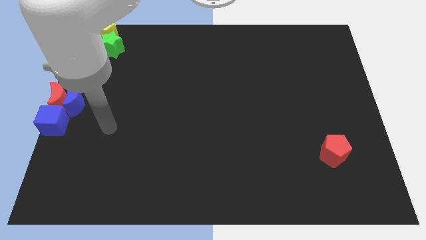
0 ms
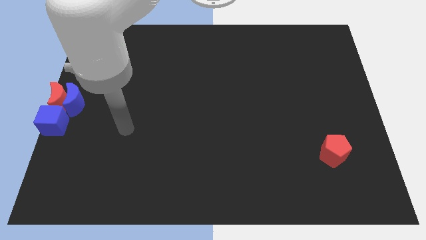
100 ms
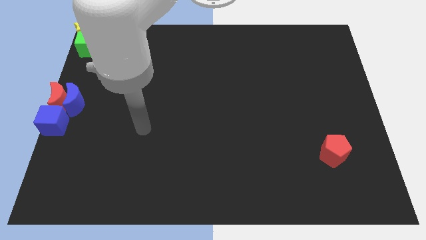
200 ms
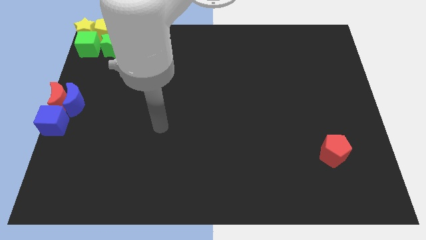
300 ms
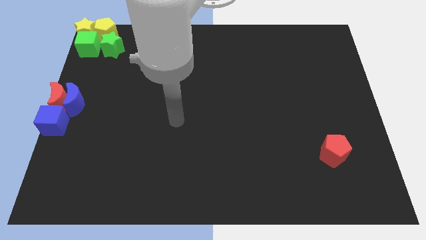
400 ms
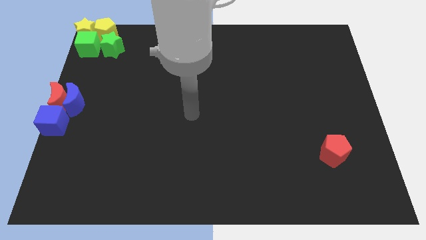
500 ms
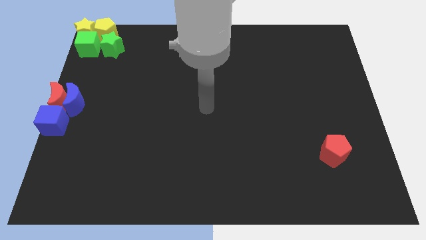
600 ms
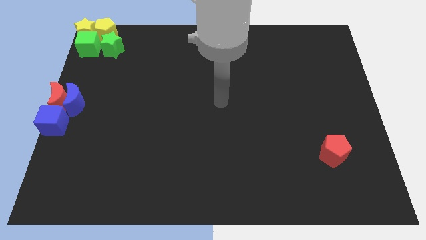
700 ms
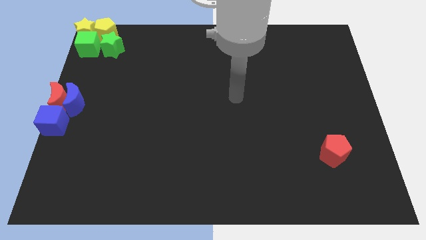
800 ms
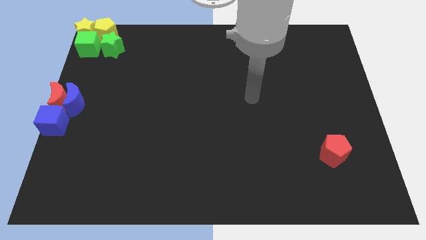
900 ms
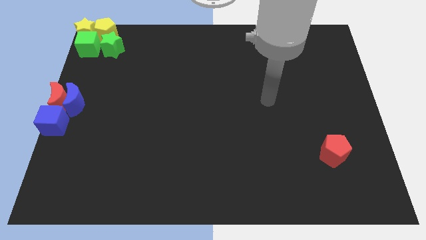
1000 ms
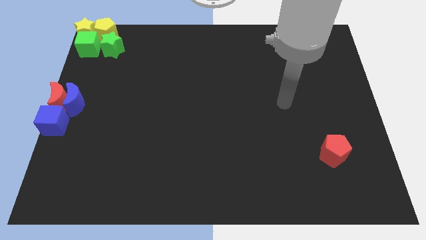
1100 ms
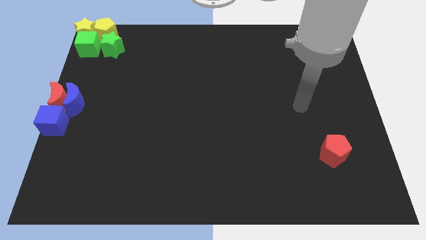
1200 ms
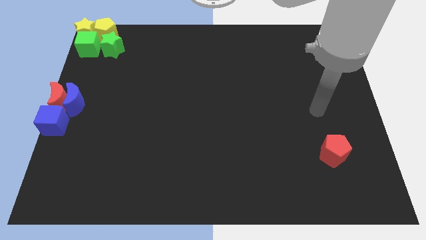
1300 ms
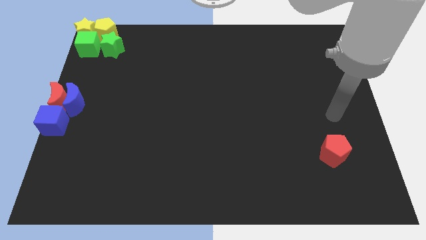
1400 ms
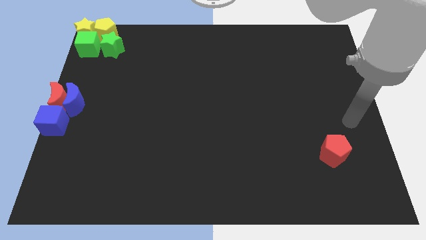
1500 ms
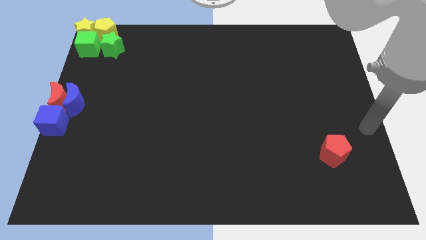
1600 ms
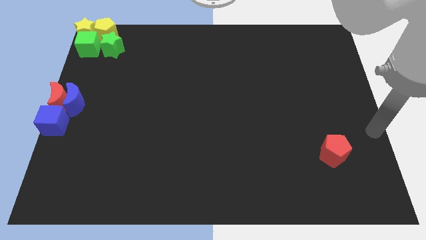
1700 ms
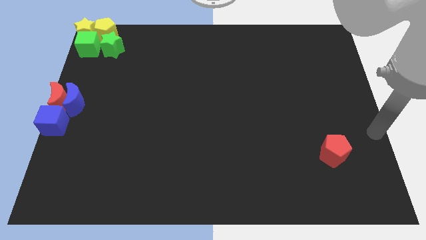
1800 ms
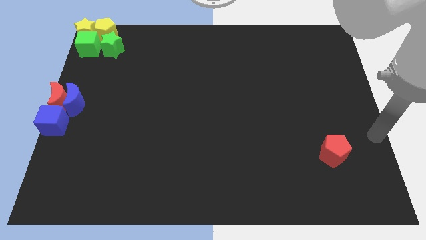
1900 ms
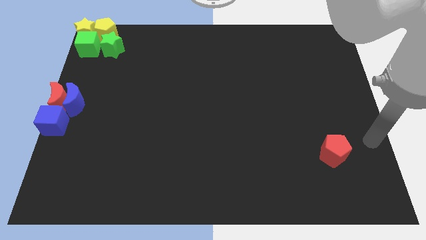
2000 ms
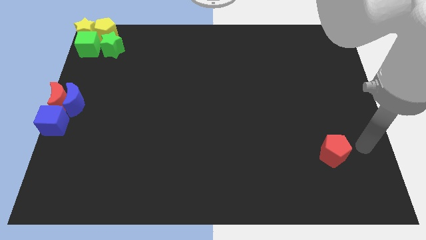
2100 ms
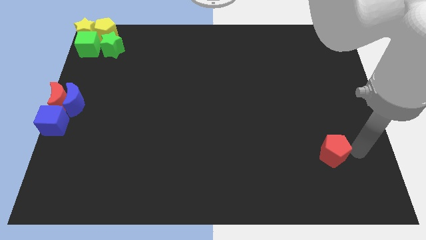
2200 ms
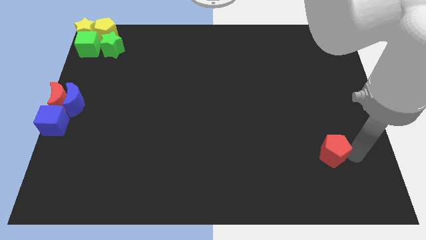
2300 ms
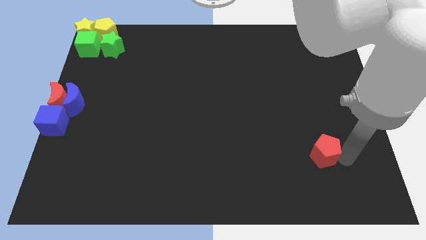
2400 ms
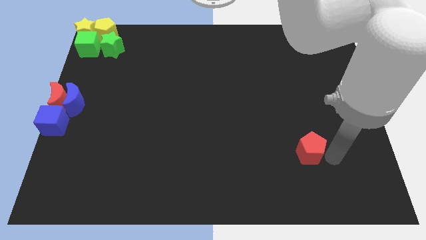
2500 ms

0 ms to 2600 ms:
move the red pentagon slightly towards center

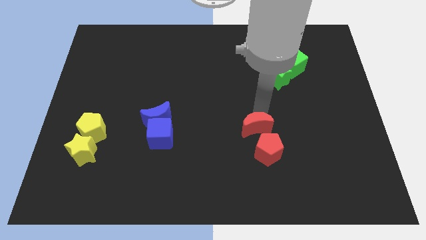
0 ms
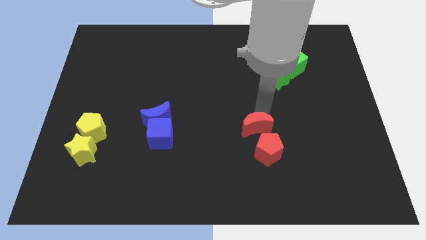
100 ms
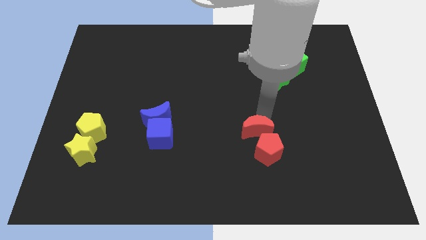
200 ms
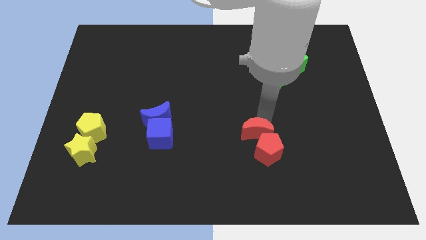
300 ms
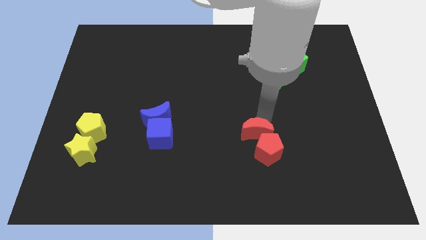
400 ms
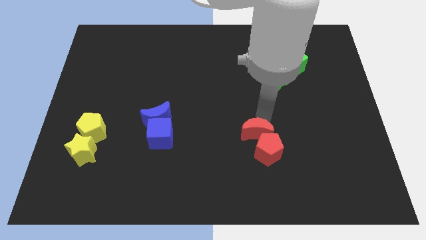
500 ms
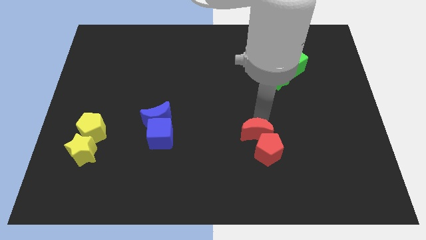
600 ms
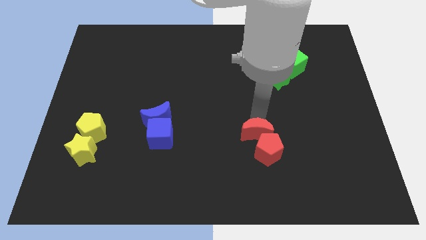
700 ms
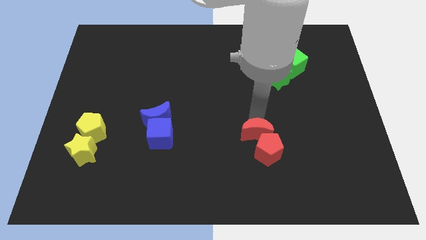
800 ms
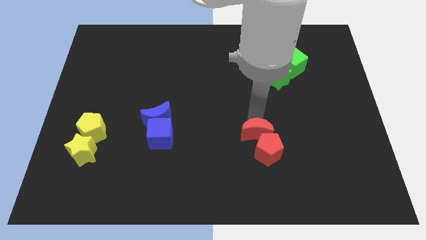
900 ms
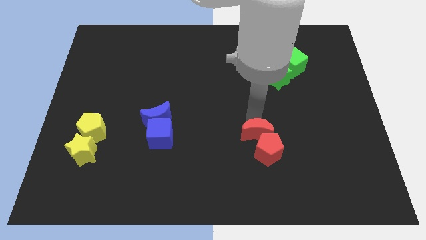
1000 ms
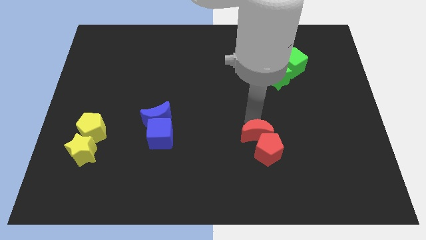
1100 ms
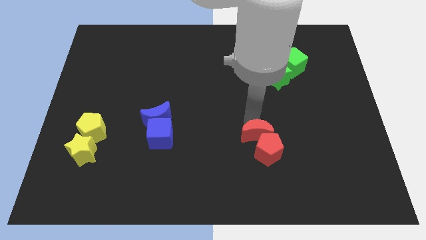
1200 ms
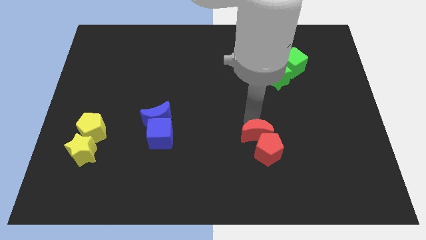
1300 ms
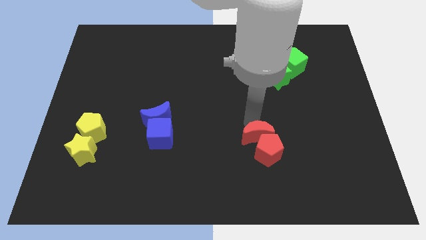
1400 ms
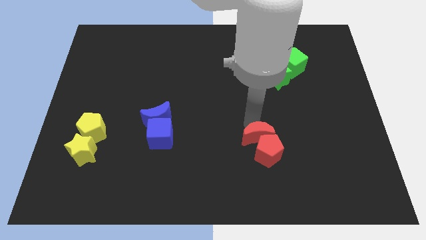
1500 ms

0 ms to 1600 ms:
move red crescent into red pentagon

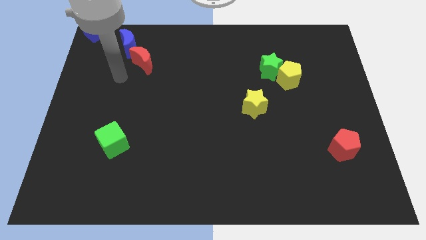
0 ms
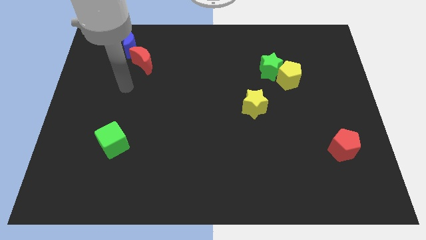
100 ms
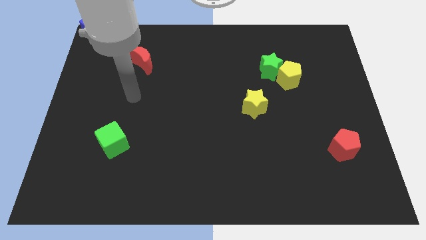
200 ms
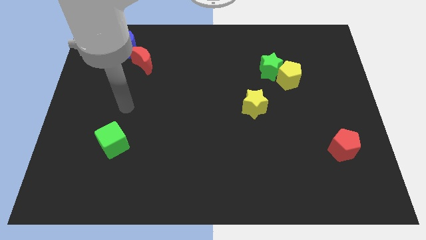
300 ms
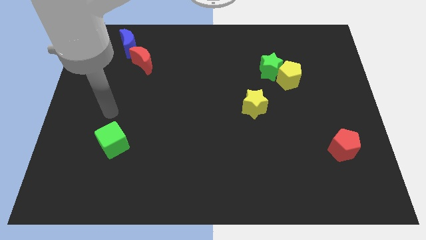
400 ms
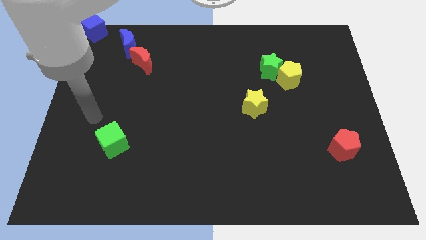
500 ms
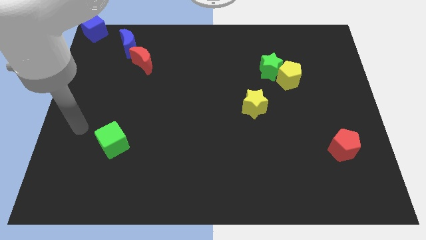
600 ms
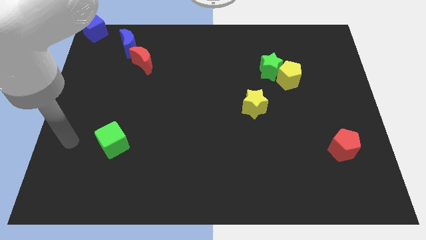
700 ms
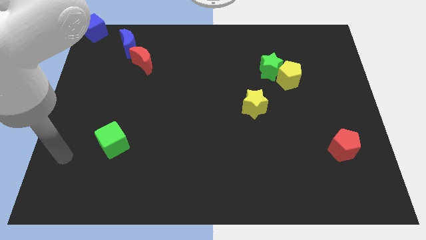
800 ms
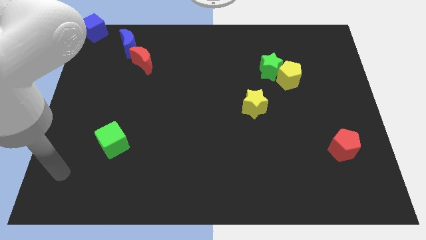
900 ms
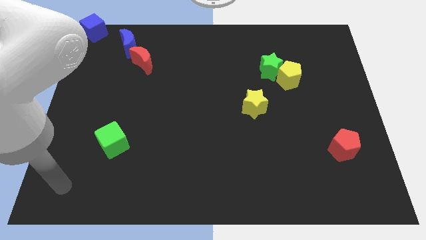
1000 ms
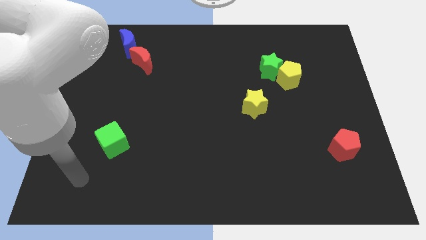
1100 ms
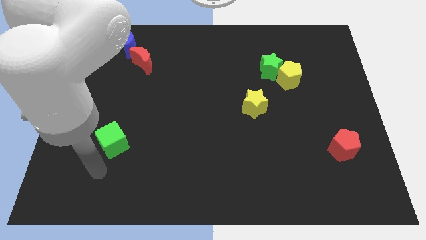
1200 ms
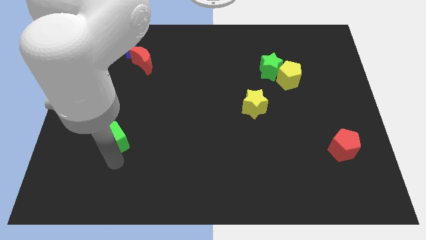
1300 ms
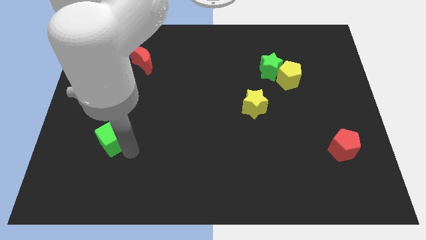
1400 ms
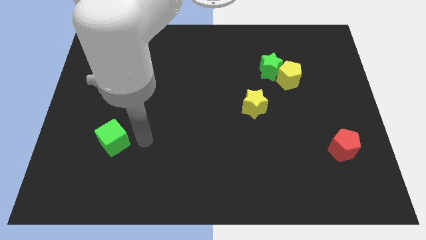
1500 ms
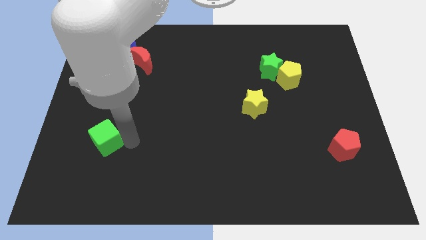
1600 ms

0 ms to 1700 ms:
place your arm to the right of green cube

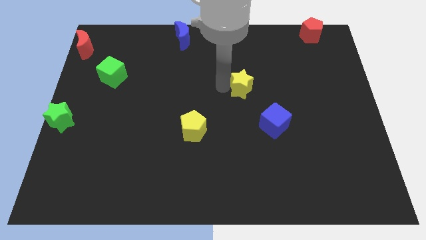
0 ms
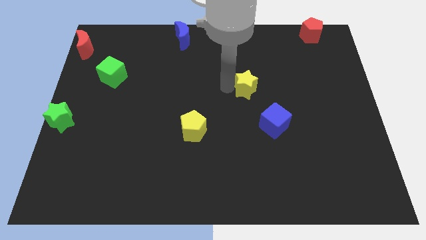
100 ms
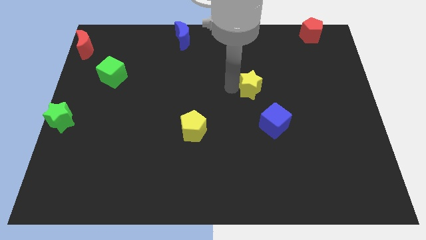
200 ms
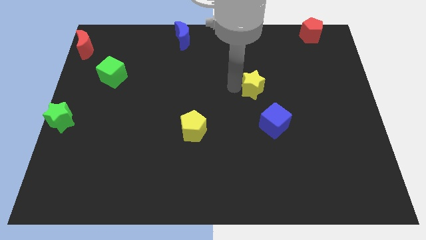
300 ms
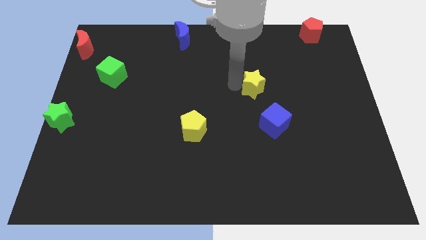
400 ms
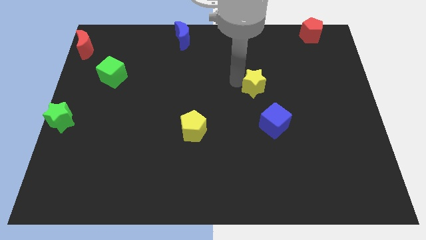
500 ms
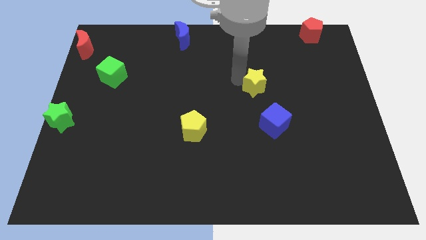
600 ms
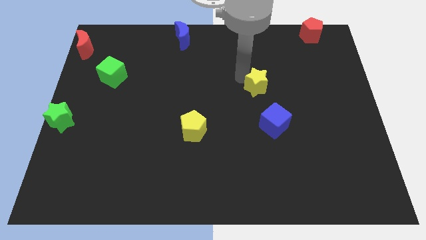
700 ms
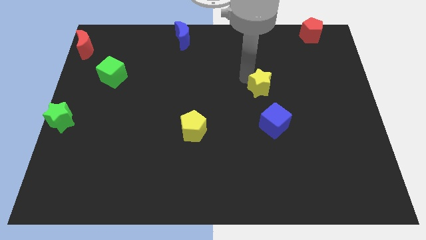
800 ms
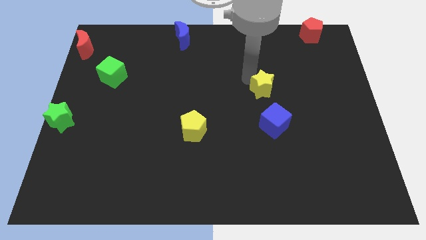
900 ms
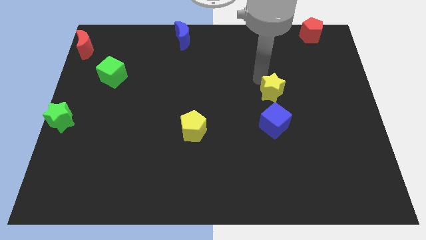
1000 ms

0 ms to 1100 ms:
place the yellow star above the blue cube

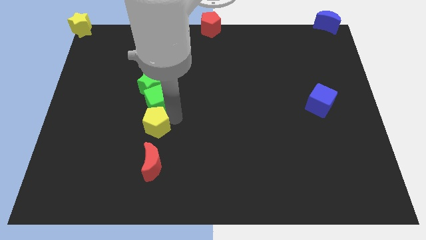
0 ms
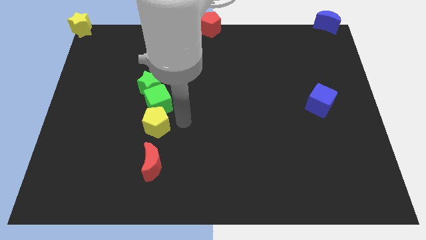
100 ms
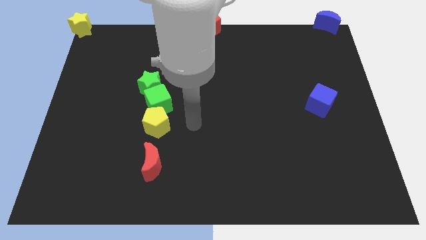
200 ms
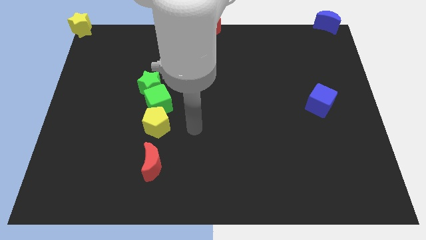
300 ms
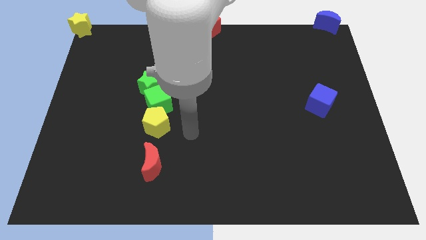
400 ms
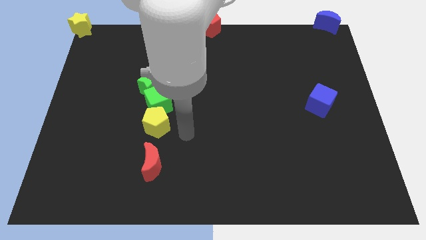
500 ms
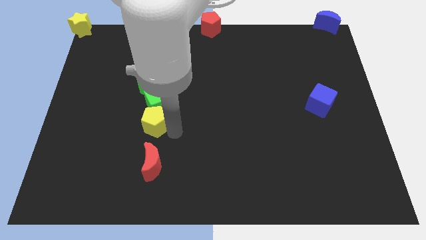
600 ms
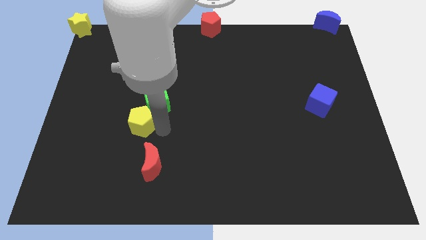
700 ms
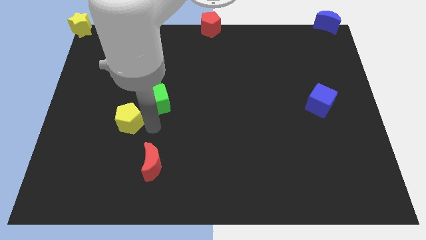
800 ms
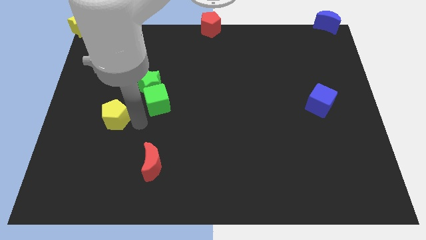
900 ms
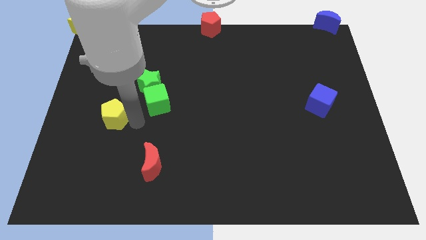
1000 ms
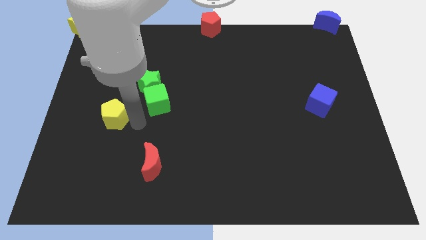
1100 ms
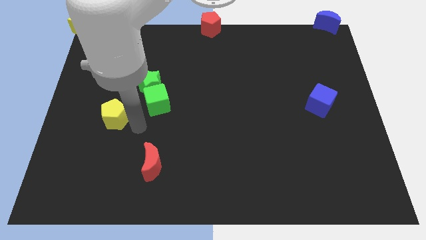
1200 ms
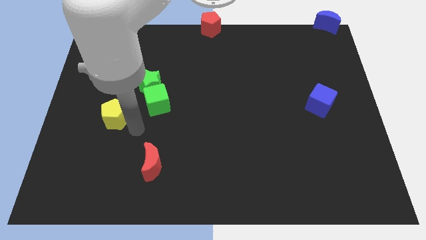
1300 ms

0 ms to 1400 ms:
slide the yellow pentagon away from the green cube

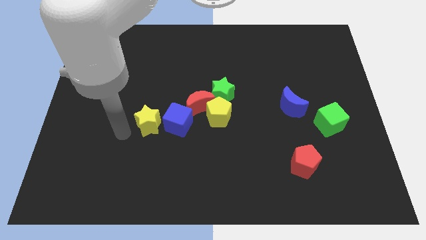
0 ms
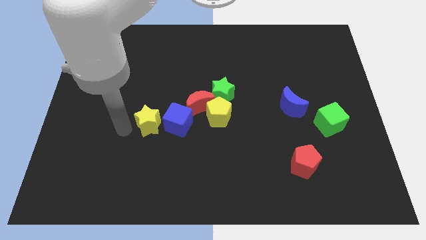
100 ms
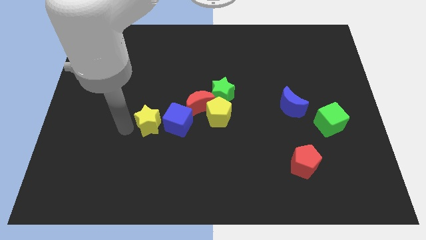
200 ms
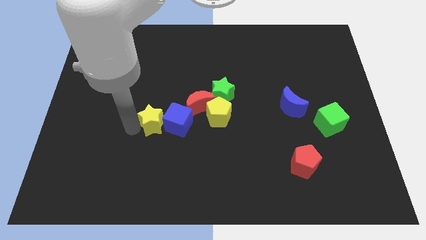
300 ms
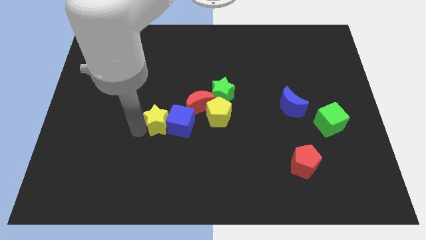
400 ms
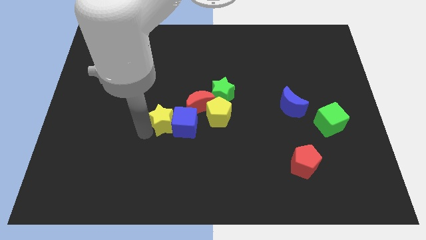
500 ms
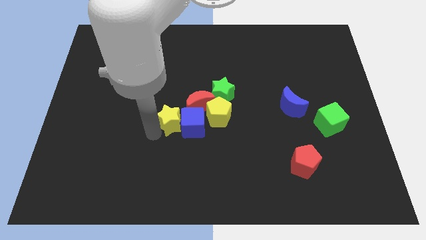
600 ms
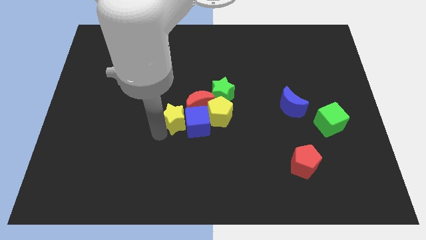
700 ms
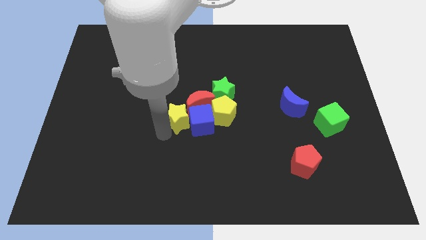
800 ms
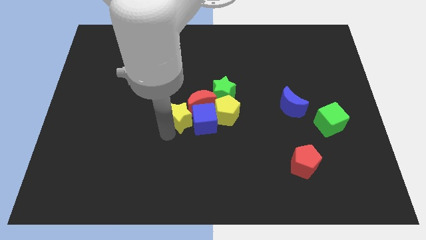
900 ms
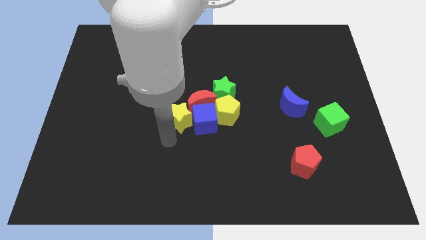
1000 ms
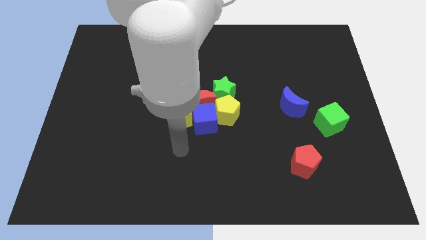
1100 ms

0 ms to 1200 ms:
push the yellow star into the blue cube
